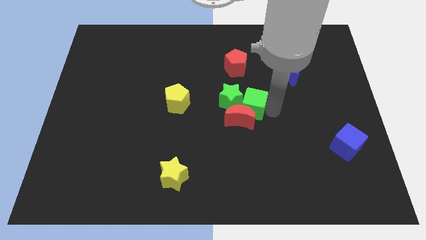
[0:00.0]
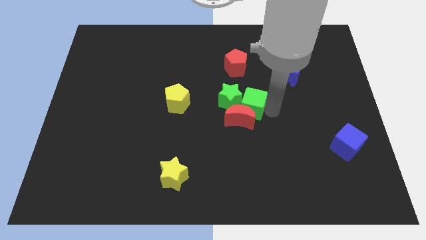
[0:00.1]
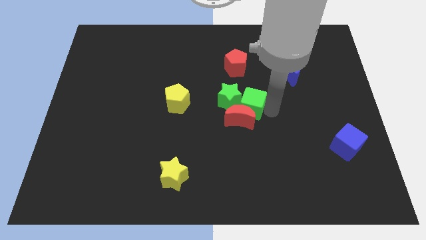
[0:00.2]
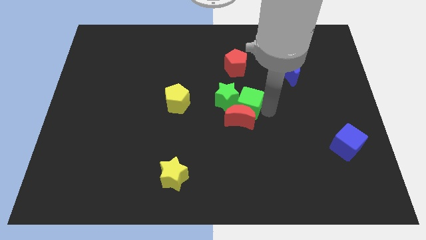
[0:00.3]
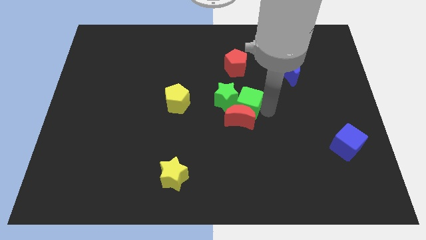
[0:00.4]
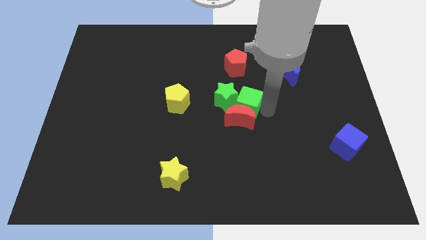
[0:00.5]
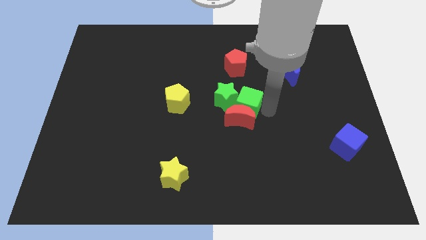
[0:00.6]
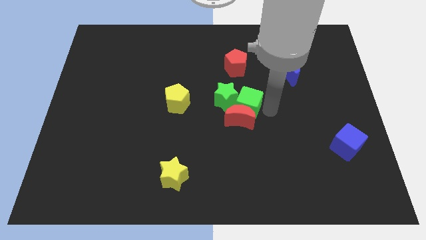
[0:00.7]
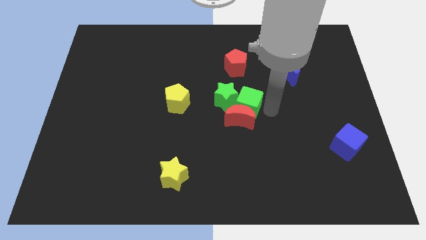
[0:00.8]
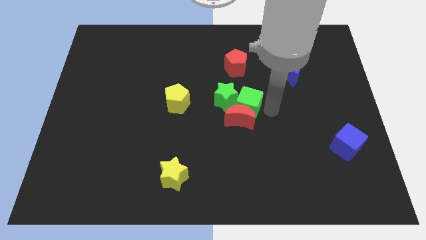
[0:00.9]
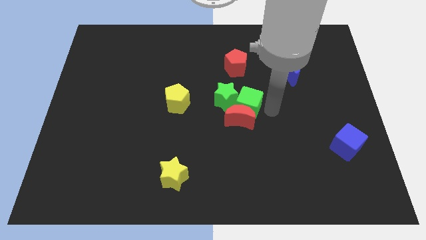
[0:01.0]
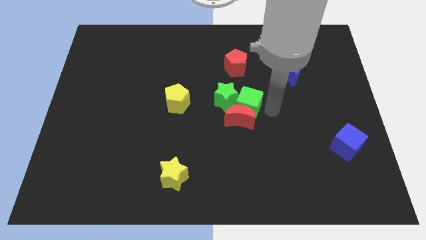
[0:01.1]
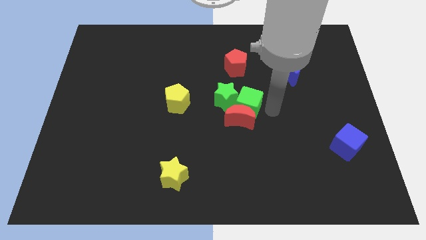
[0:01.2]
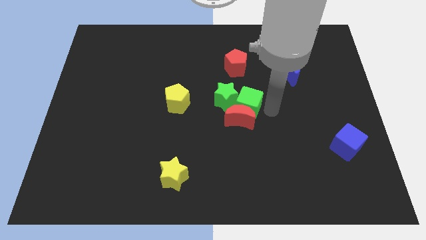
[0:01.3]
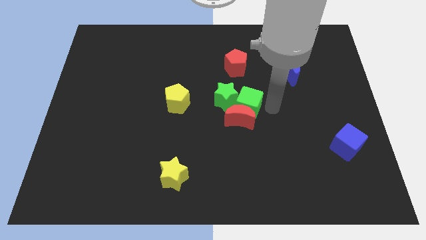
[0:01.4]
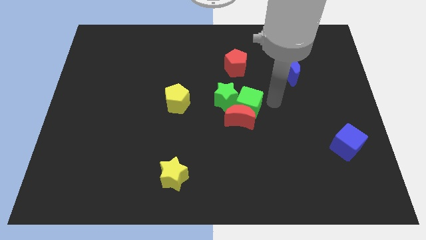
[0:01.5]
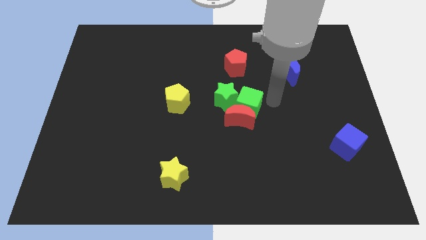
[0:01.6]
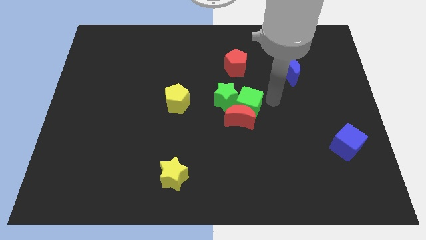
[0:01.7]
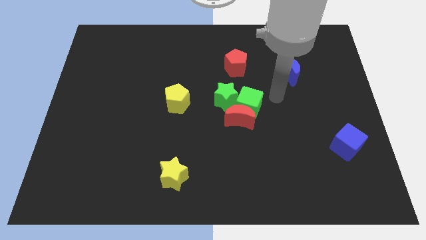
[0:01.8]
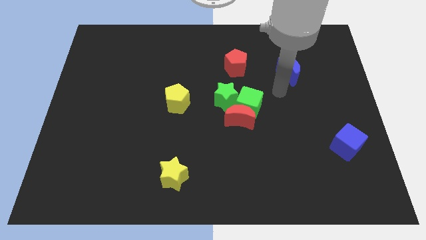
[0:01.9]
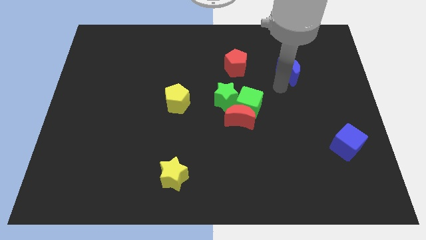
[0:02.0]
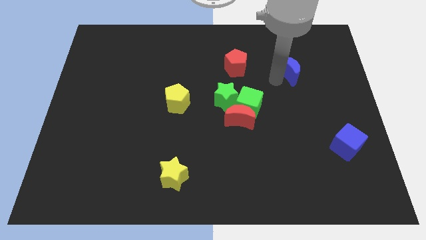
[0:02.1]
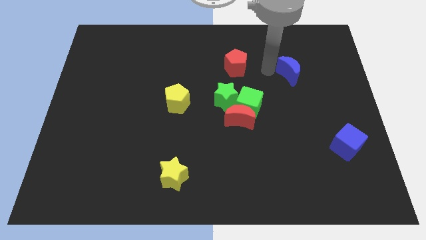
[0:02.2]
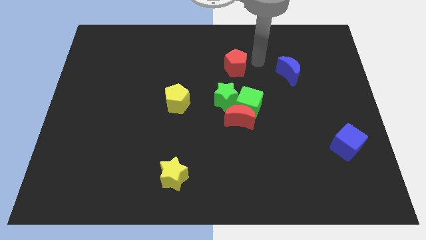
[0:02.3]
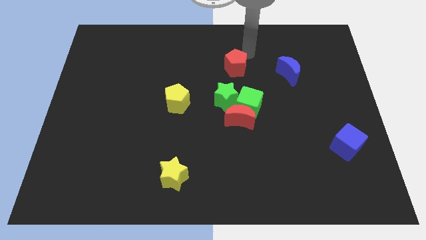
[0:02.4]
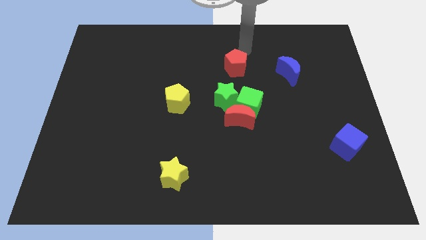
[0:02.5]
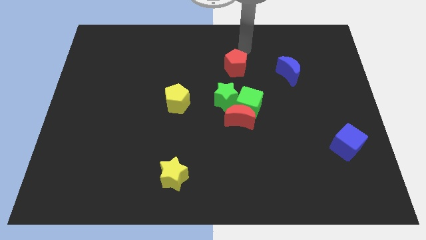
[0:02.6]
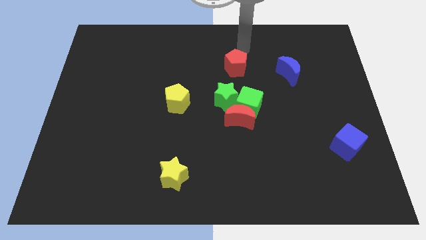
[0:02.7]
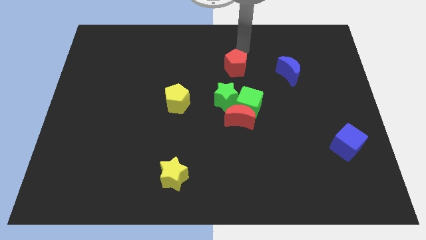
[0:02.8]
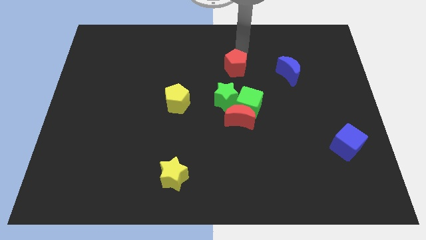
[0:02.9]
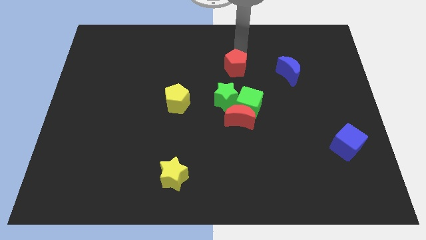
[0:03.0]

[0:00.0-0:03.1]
move your arm above the red pentagon

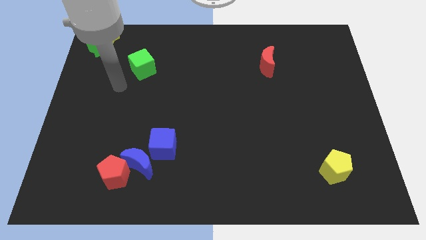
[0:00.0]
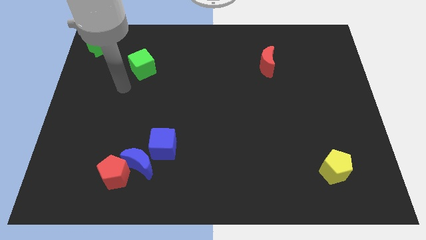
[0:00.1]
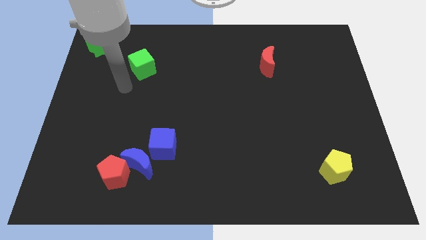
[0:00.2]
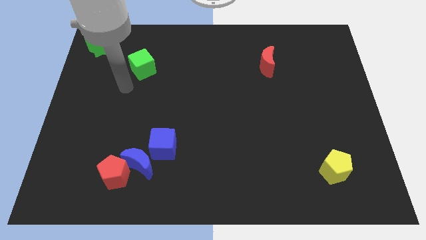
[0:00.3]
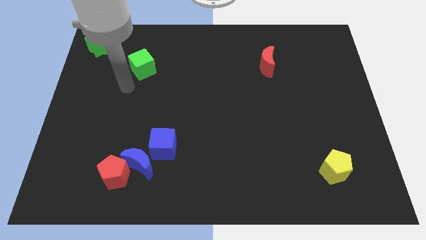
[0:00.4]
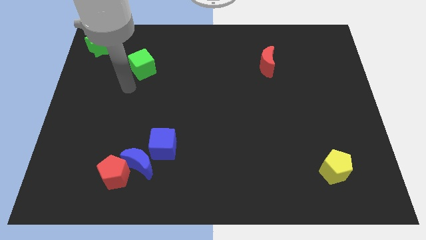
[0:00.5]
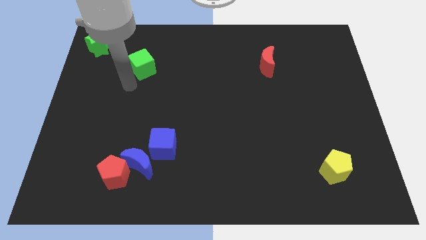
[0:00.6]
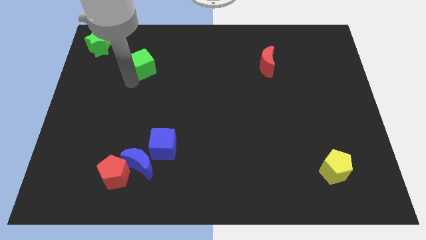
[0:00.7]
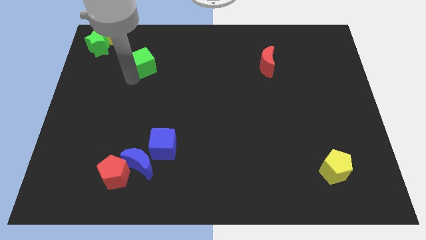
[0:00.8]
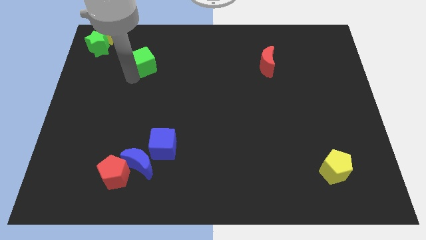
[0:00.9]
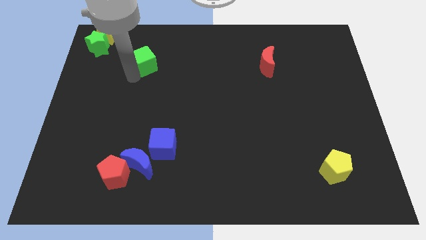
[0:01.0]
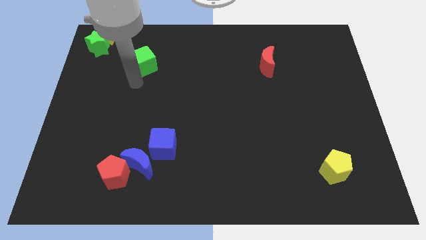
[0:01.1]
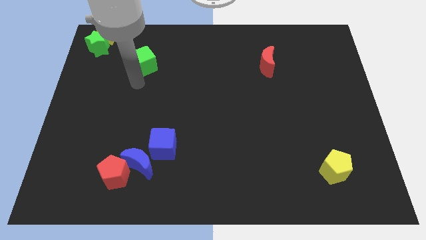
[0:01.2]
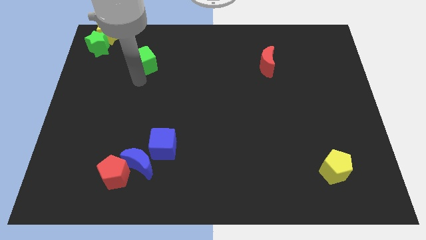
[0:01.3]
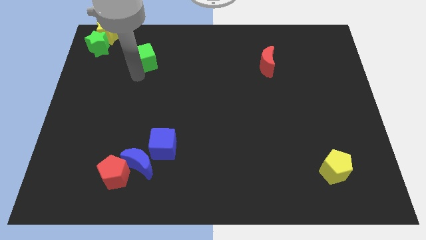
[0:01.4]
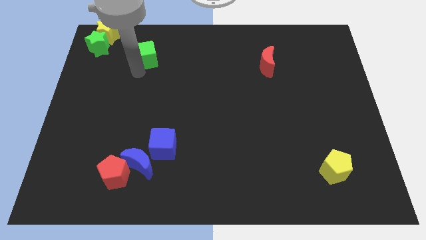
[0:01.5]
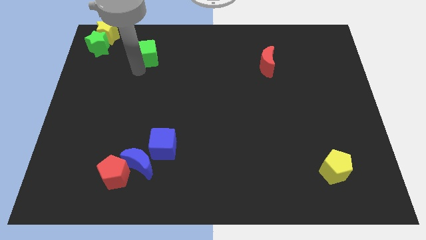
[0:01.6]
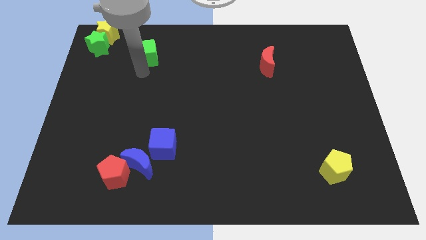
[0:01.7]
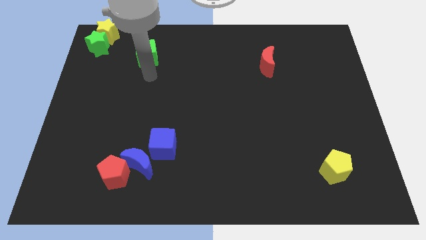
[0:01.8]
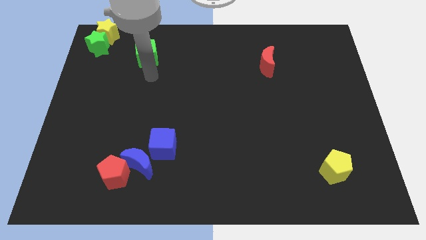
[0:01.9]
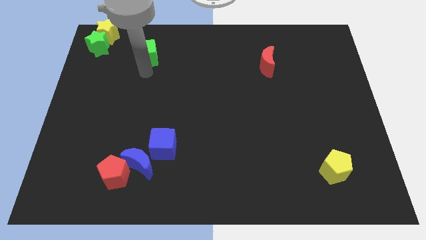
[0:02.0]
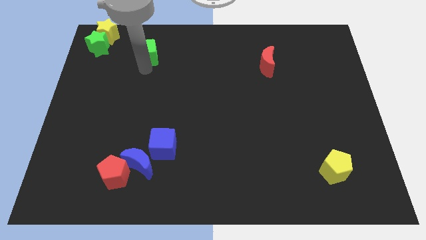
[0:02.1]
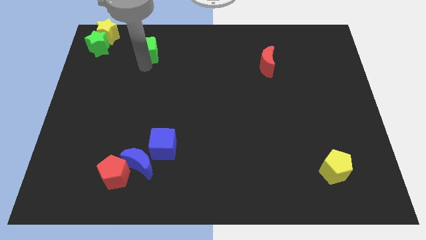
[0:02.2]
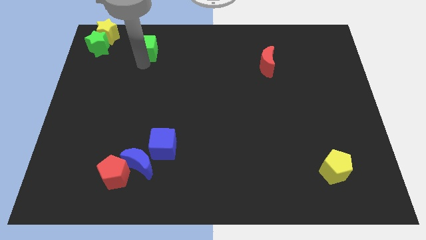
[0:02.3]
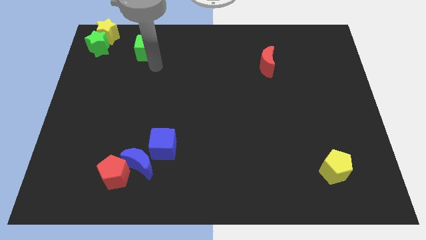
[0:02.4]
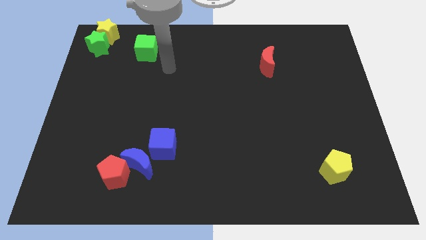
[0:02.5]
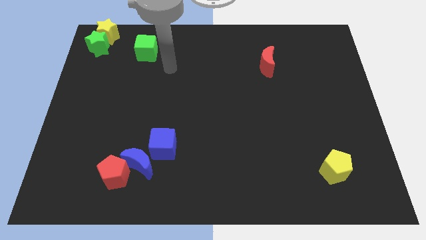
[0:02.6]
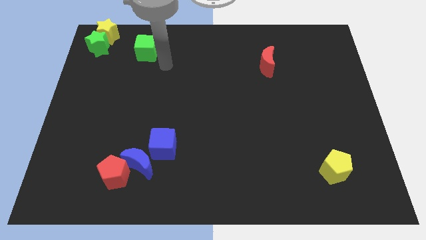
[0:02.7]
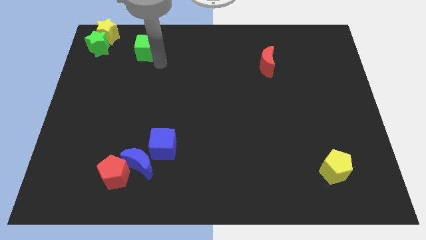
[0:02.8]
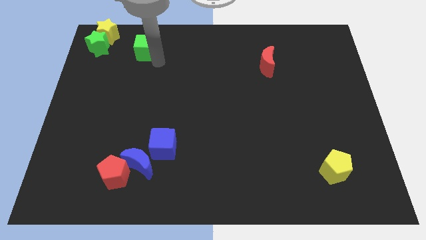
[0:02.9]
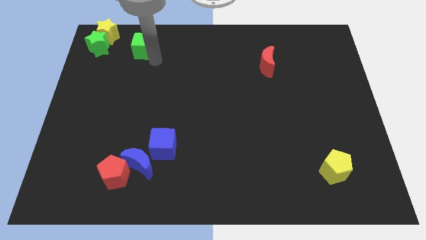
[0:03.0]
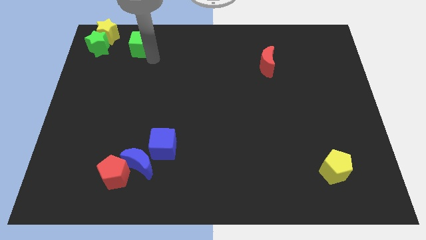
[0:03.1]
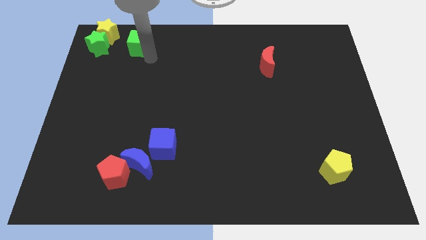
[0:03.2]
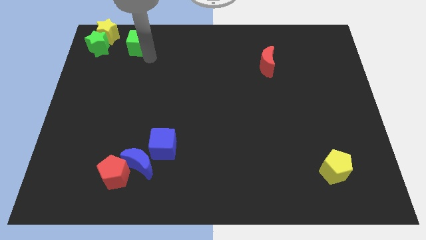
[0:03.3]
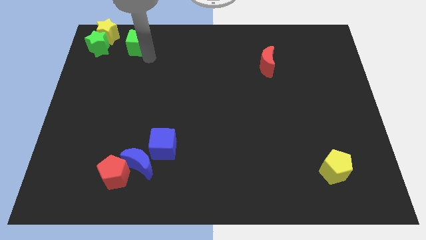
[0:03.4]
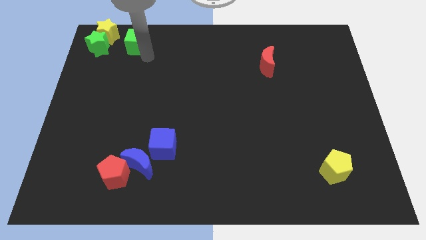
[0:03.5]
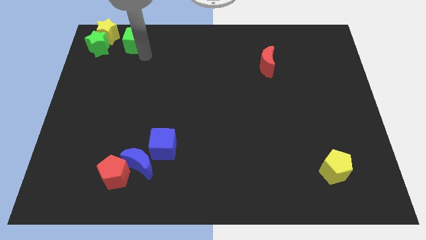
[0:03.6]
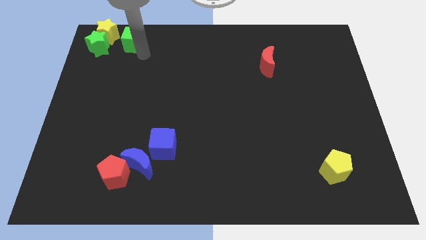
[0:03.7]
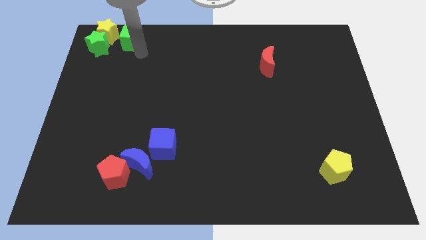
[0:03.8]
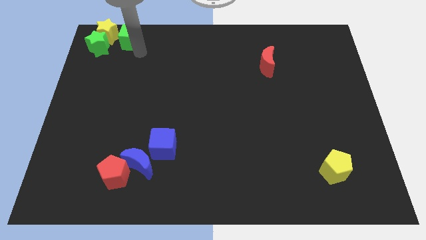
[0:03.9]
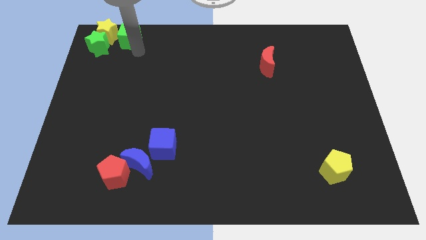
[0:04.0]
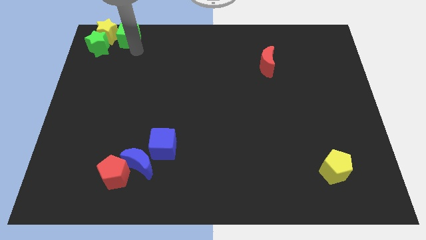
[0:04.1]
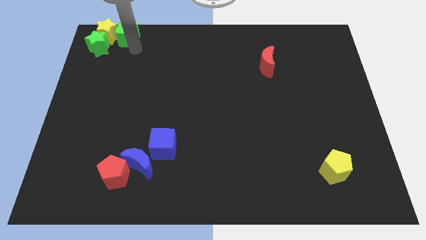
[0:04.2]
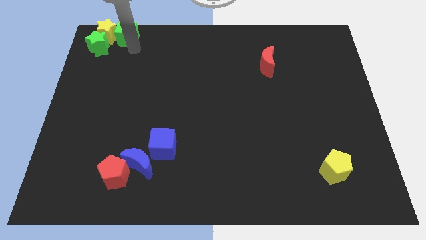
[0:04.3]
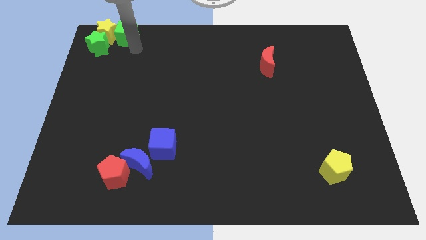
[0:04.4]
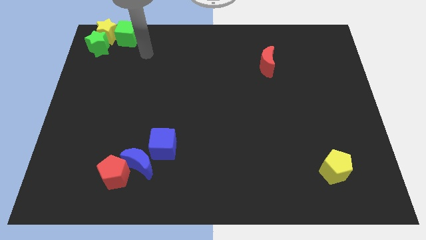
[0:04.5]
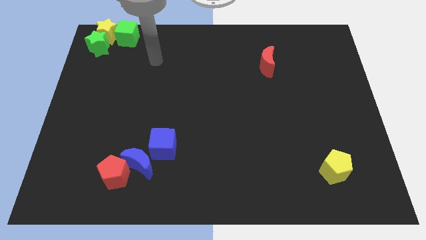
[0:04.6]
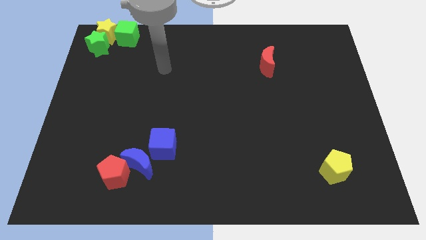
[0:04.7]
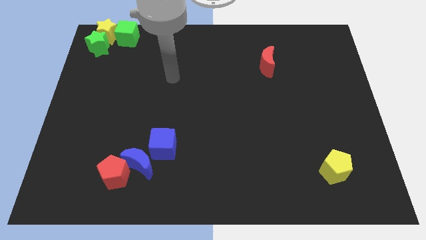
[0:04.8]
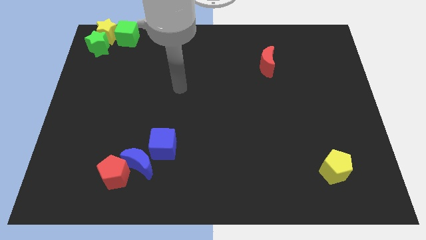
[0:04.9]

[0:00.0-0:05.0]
push the green cube to the right of the yellow star

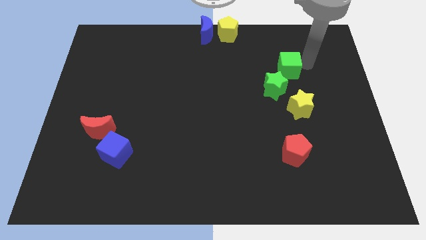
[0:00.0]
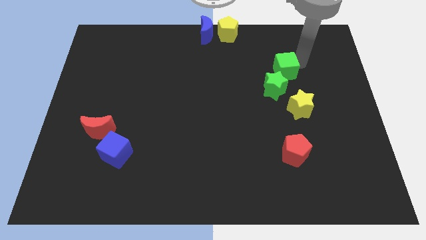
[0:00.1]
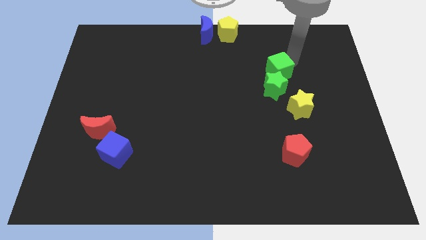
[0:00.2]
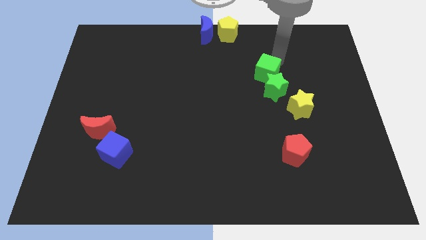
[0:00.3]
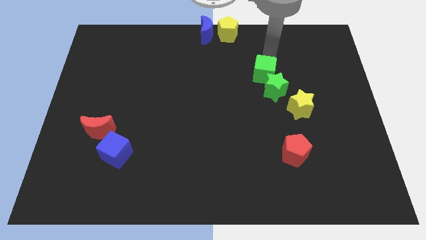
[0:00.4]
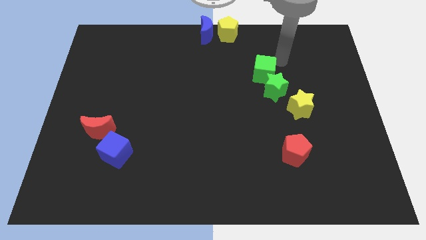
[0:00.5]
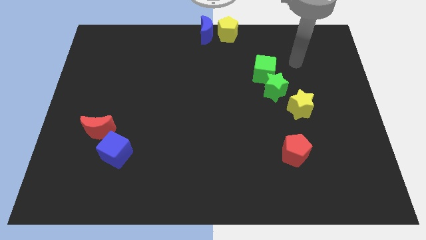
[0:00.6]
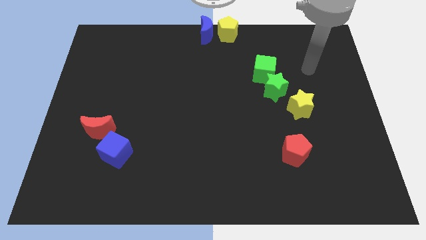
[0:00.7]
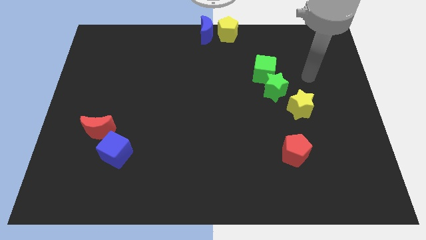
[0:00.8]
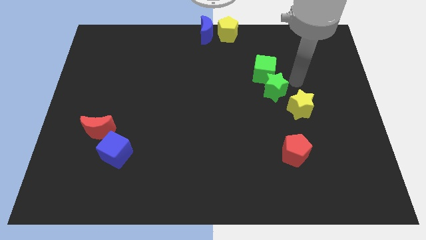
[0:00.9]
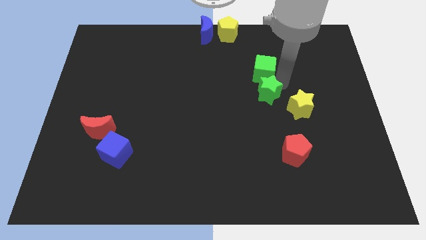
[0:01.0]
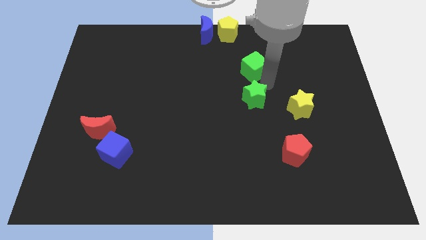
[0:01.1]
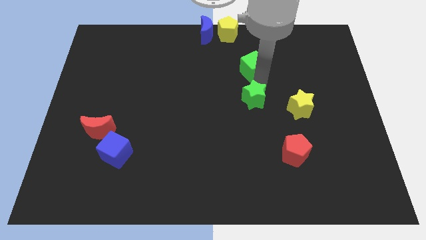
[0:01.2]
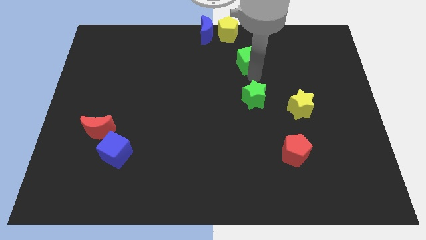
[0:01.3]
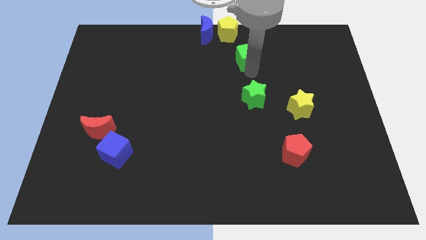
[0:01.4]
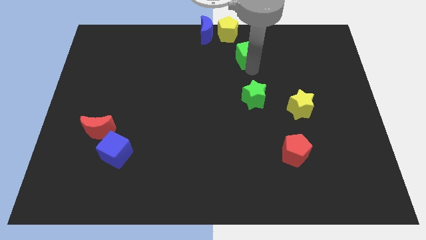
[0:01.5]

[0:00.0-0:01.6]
separate the green cube and the green star
